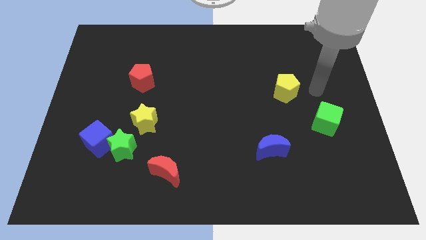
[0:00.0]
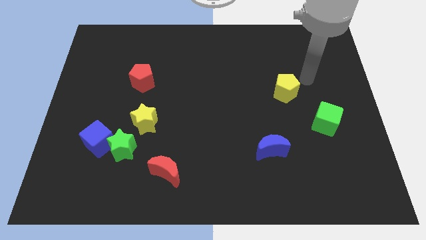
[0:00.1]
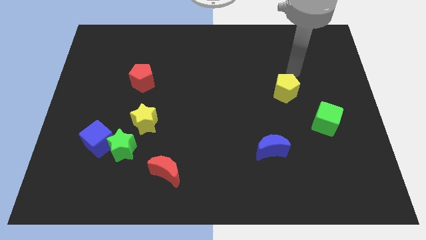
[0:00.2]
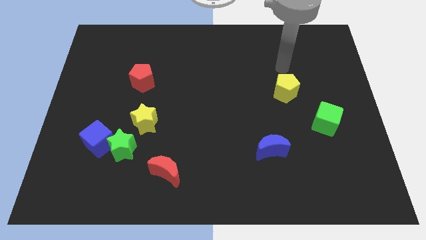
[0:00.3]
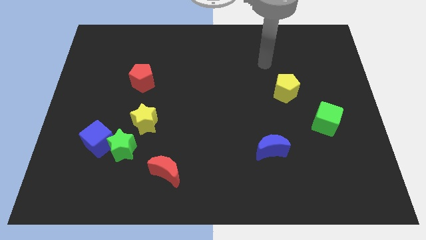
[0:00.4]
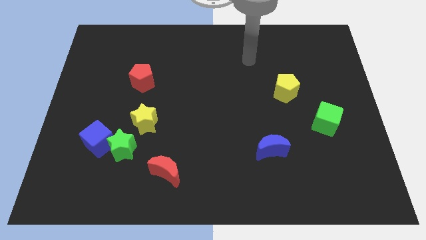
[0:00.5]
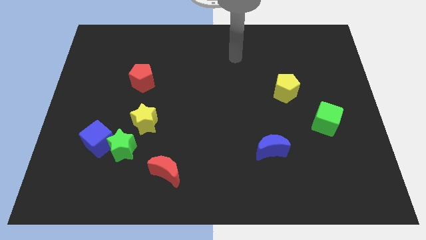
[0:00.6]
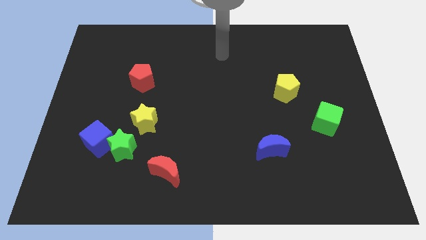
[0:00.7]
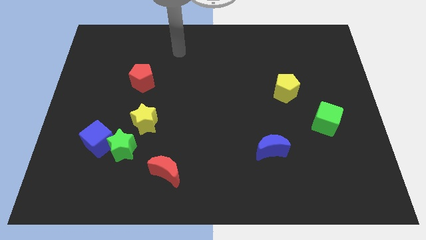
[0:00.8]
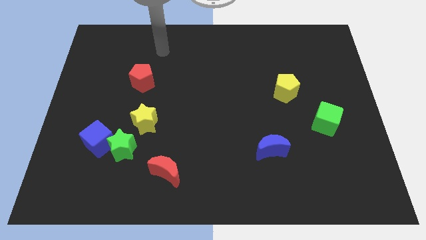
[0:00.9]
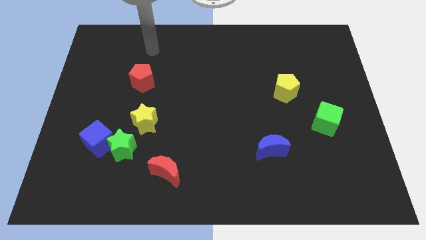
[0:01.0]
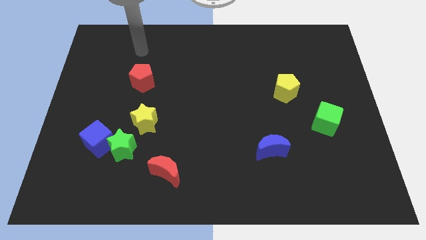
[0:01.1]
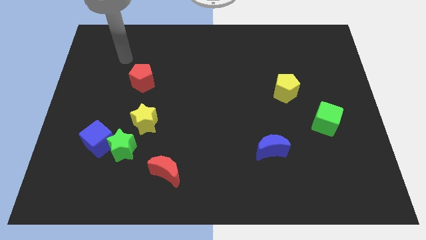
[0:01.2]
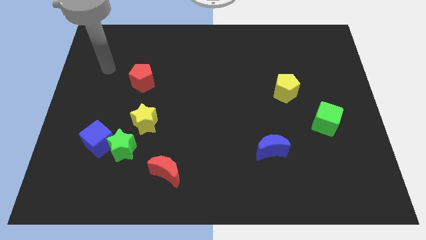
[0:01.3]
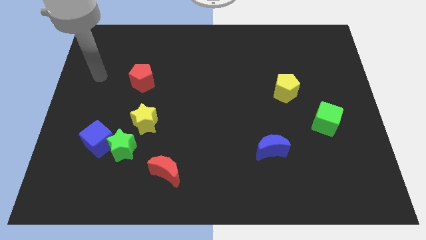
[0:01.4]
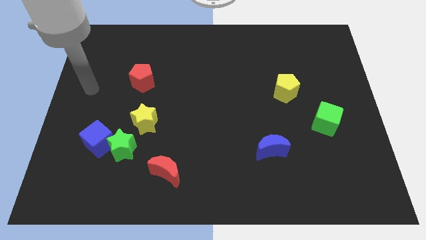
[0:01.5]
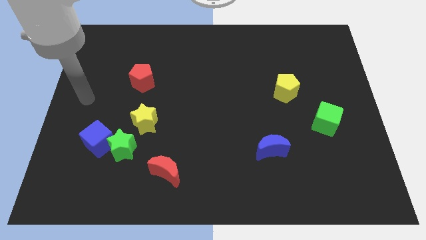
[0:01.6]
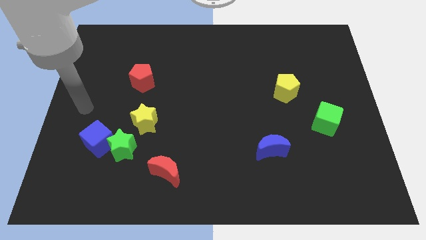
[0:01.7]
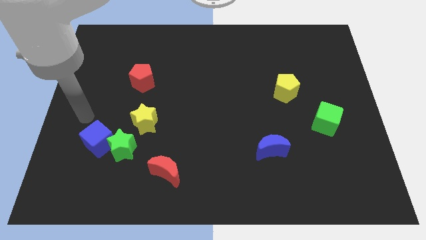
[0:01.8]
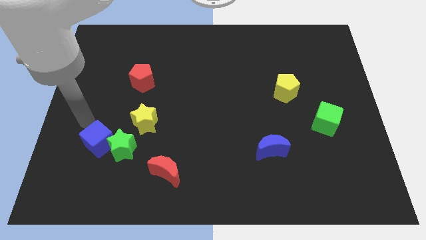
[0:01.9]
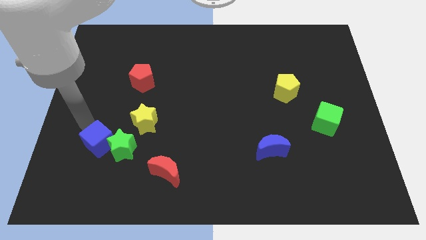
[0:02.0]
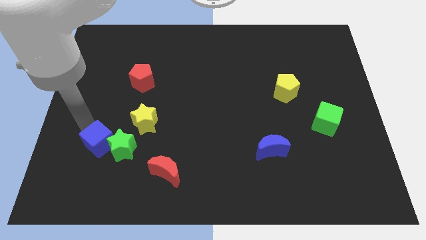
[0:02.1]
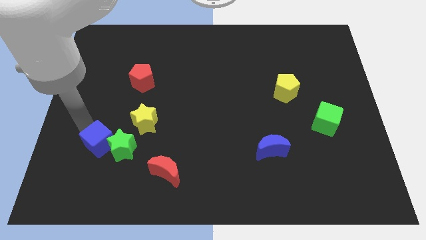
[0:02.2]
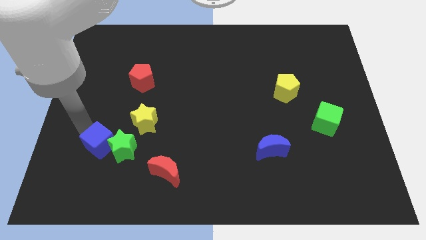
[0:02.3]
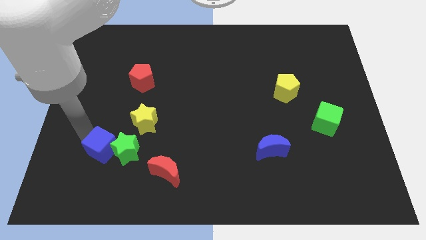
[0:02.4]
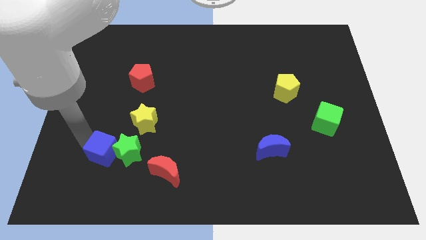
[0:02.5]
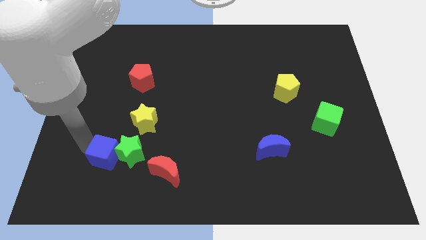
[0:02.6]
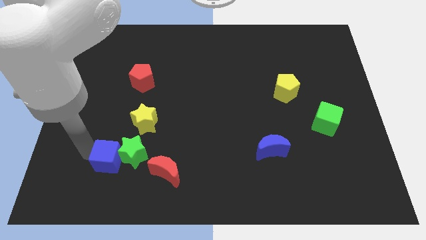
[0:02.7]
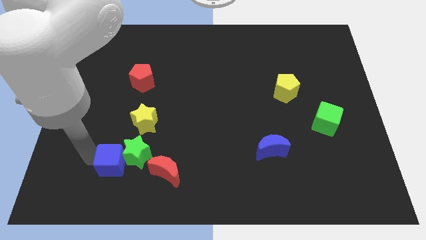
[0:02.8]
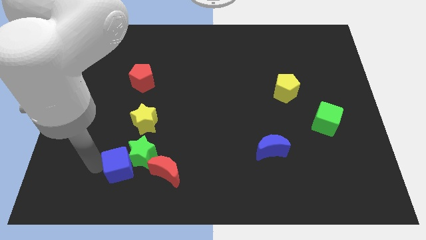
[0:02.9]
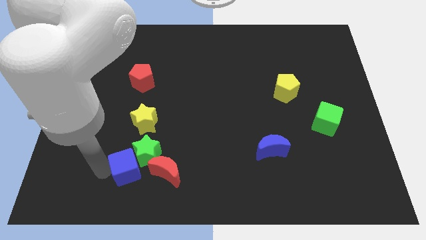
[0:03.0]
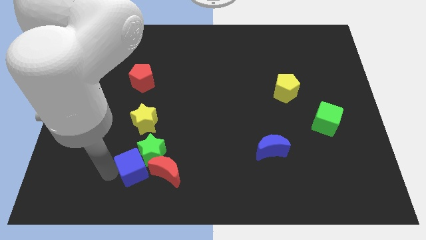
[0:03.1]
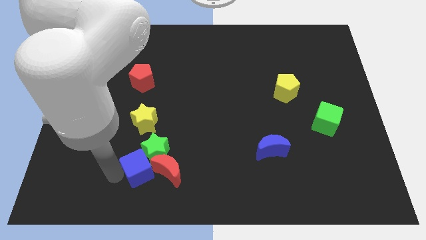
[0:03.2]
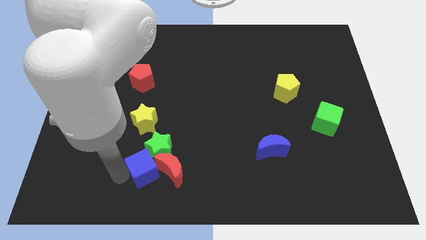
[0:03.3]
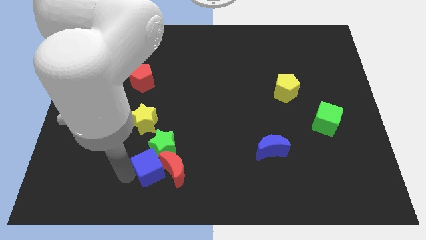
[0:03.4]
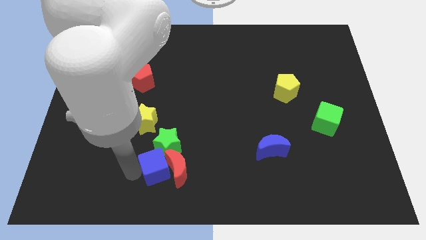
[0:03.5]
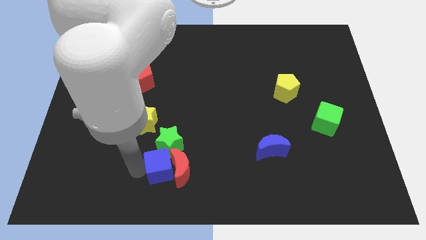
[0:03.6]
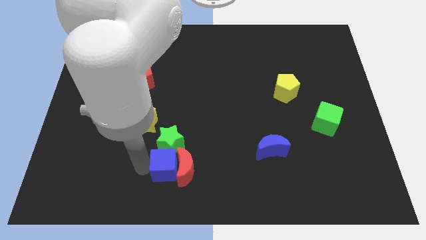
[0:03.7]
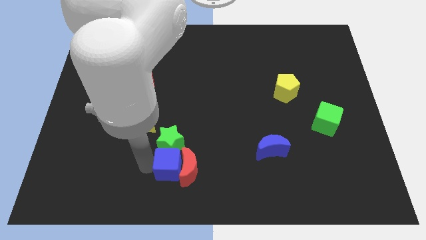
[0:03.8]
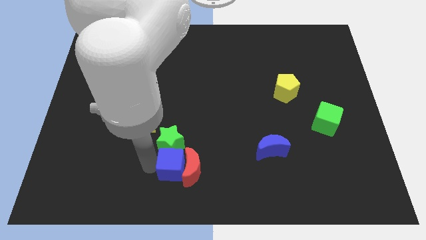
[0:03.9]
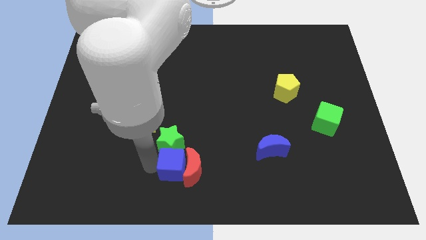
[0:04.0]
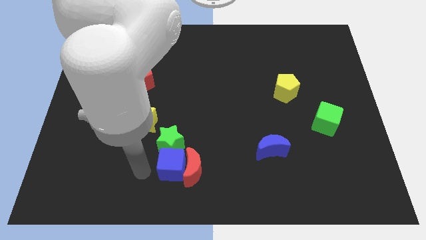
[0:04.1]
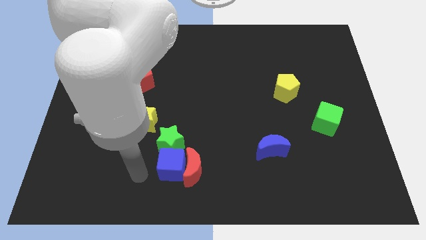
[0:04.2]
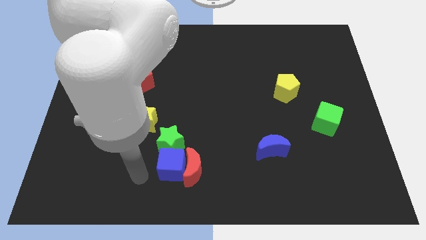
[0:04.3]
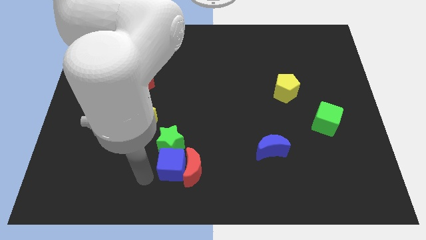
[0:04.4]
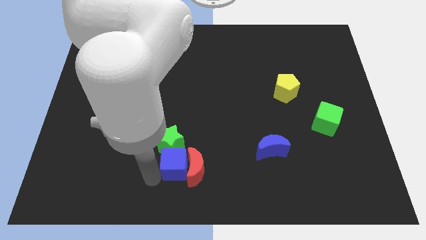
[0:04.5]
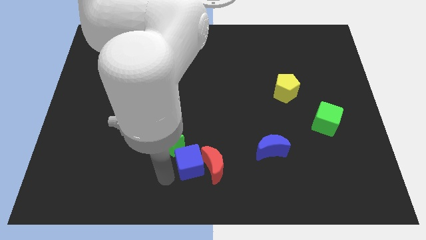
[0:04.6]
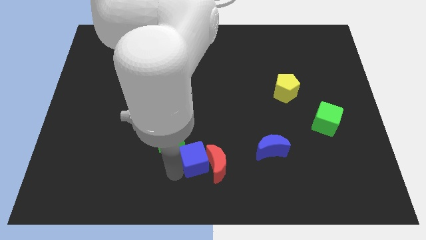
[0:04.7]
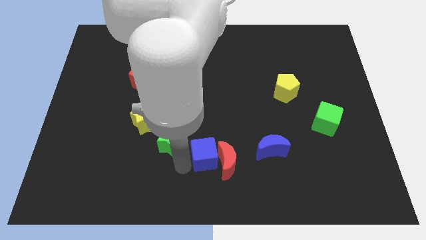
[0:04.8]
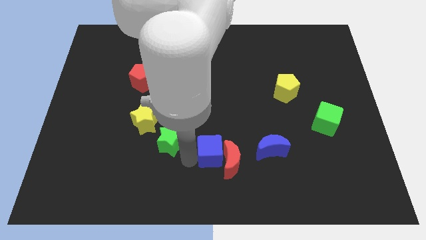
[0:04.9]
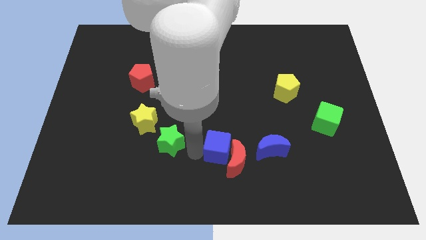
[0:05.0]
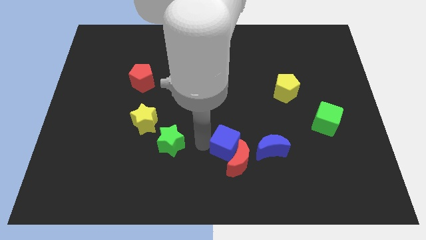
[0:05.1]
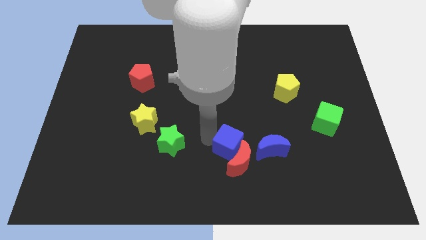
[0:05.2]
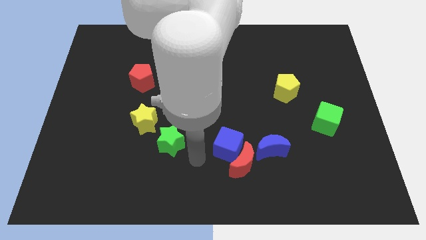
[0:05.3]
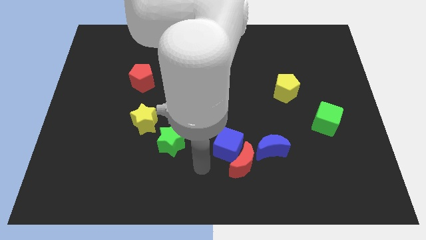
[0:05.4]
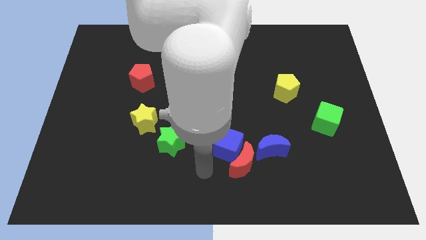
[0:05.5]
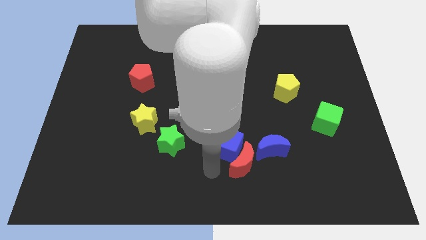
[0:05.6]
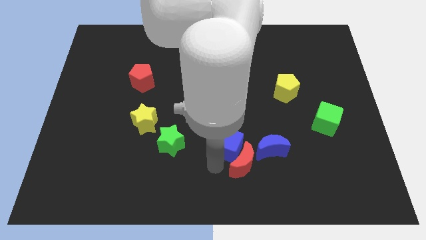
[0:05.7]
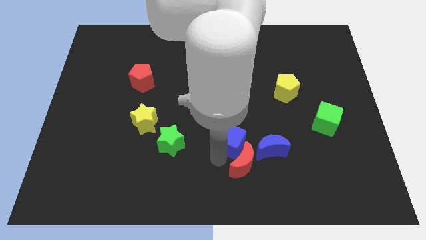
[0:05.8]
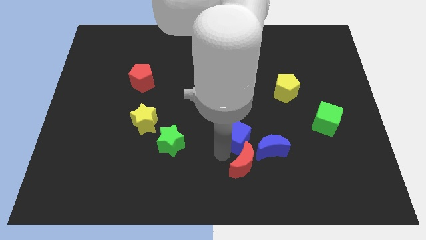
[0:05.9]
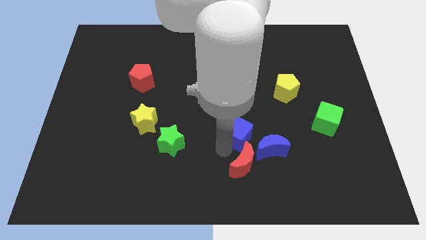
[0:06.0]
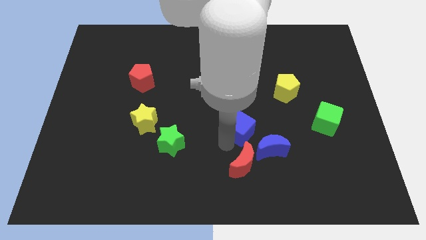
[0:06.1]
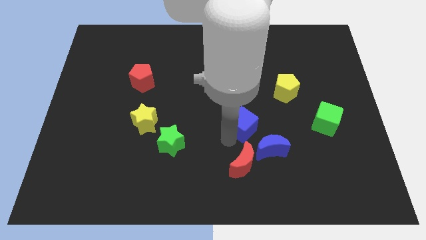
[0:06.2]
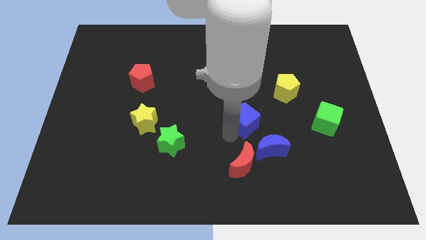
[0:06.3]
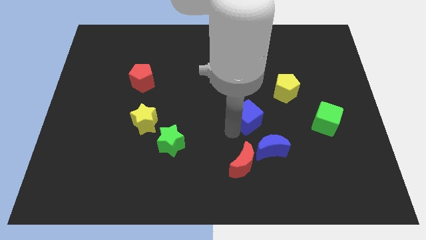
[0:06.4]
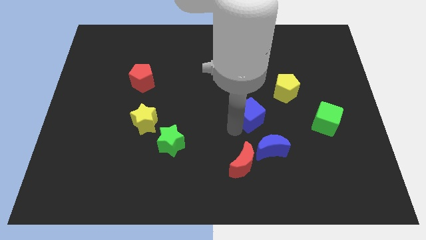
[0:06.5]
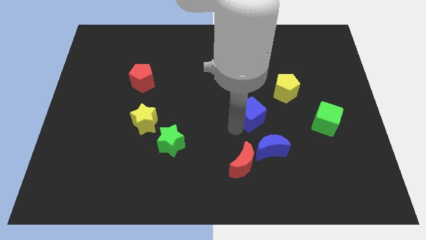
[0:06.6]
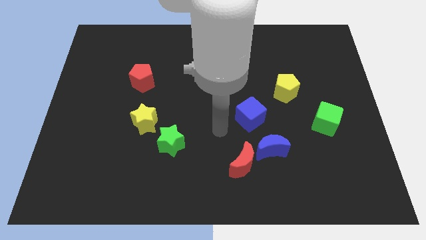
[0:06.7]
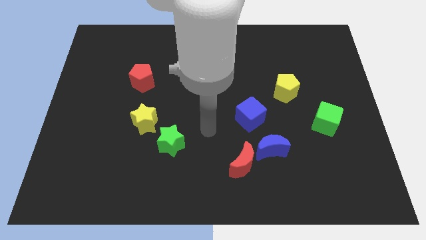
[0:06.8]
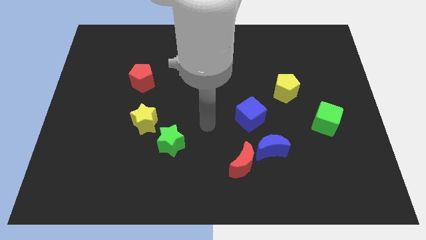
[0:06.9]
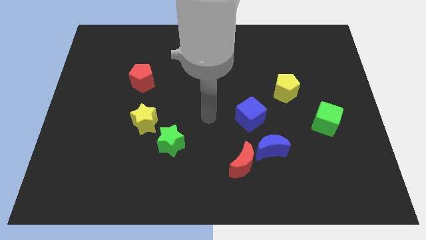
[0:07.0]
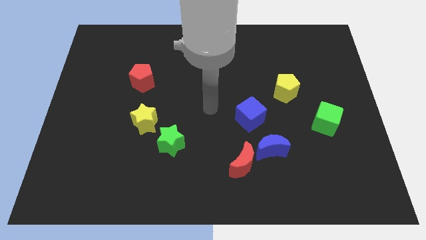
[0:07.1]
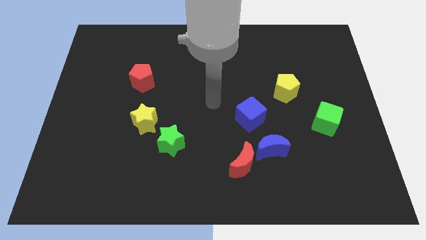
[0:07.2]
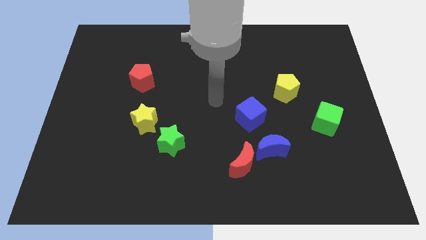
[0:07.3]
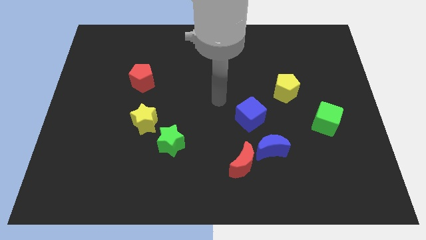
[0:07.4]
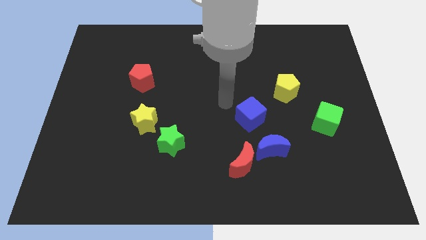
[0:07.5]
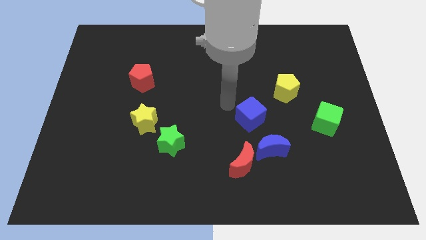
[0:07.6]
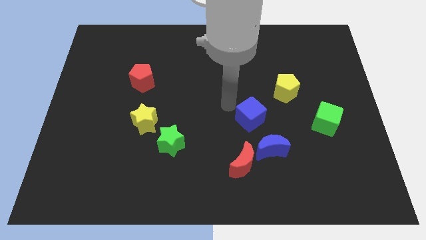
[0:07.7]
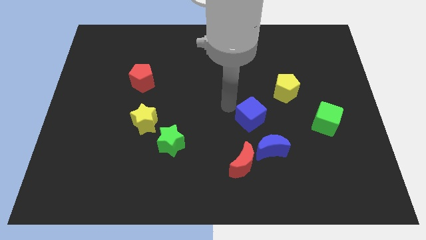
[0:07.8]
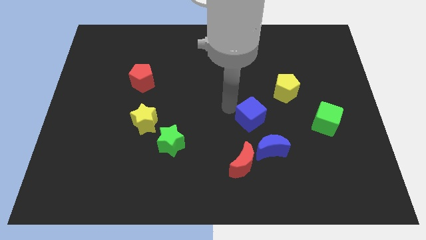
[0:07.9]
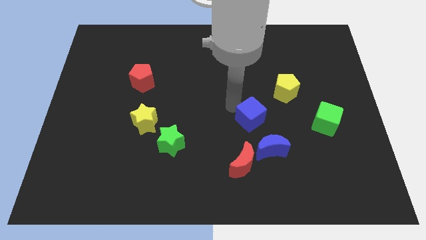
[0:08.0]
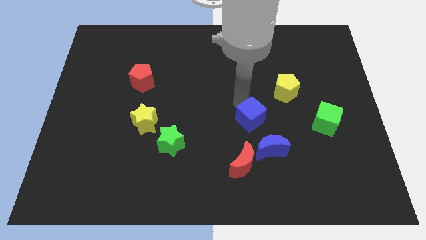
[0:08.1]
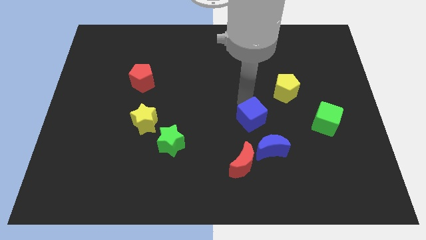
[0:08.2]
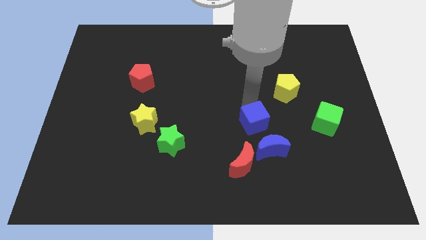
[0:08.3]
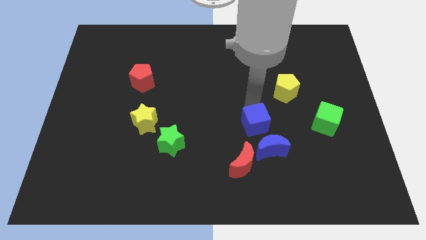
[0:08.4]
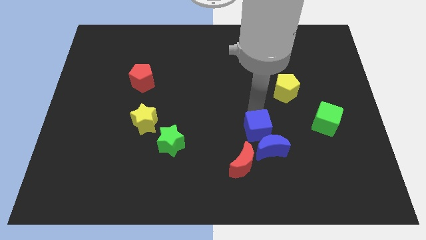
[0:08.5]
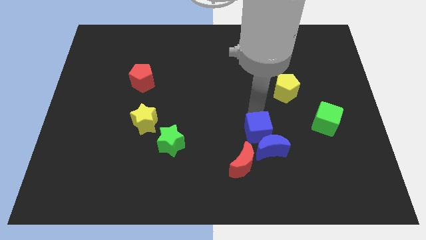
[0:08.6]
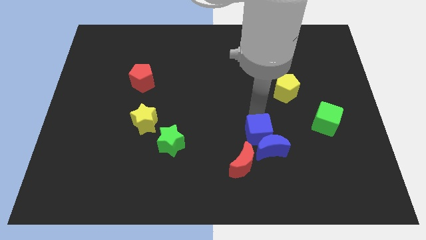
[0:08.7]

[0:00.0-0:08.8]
move the blue cube next to the blue moon
